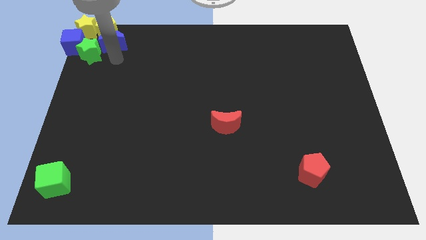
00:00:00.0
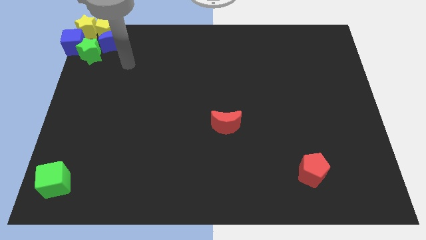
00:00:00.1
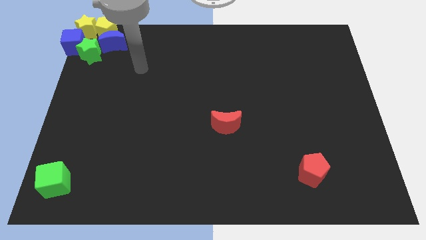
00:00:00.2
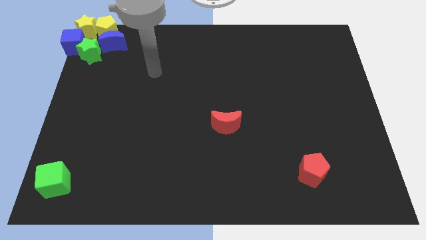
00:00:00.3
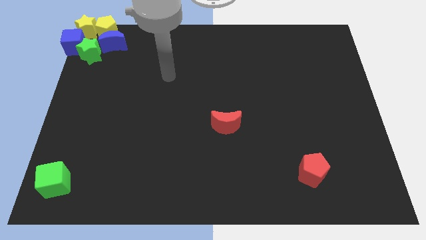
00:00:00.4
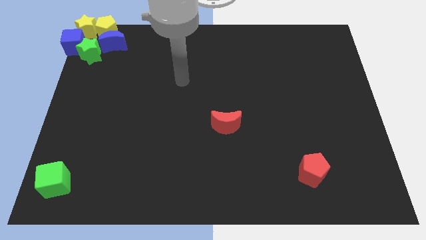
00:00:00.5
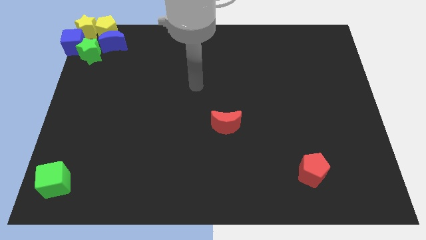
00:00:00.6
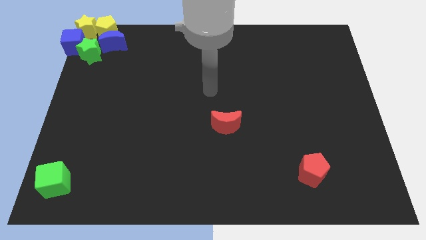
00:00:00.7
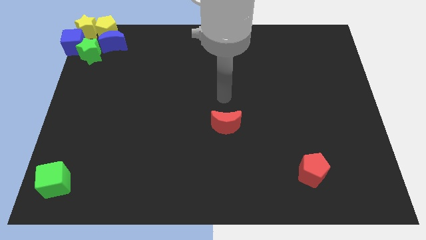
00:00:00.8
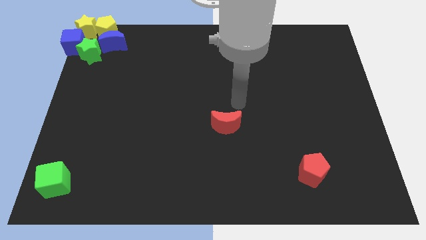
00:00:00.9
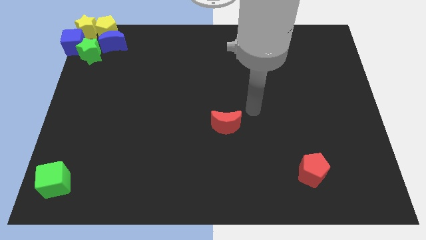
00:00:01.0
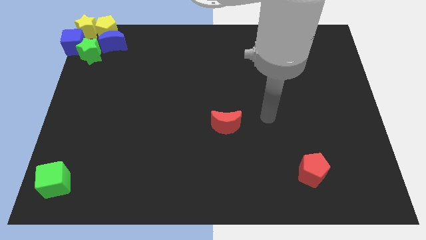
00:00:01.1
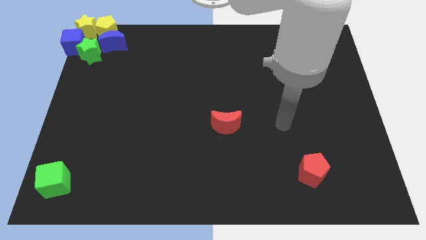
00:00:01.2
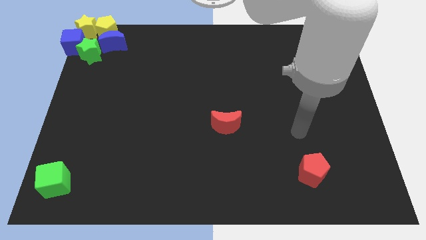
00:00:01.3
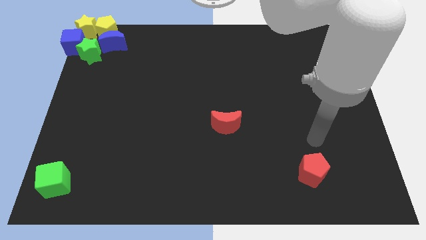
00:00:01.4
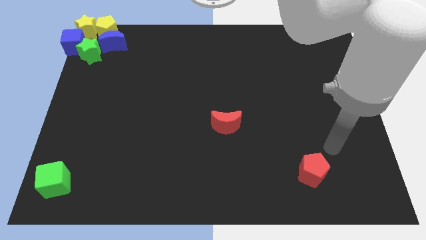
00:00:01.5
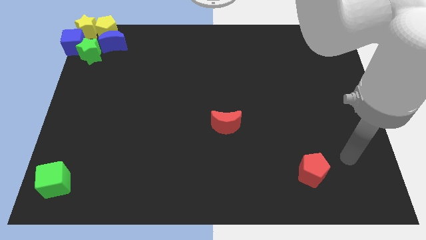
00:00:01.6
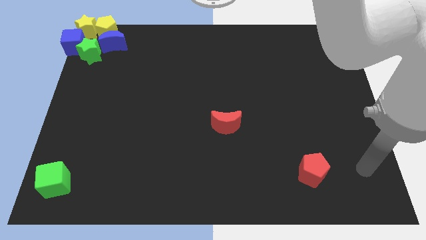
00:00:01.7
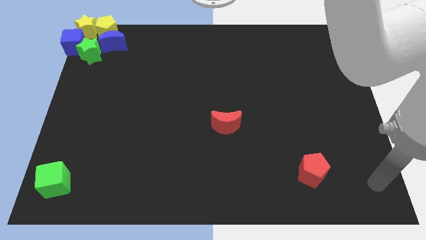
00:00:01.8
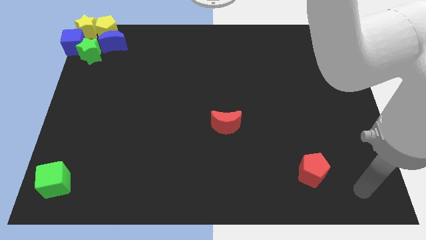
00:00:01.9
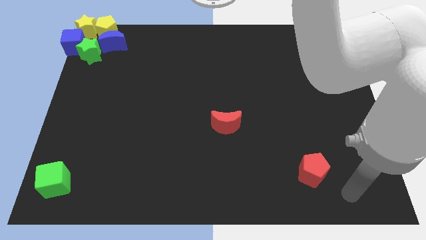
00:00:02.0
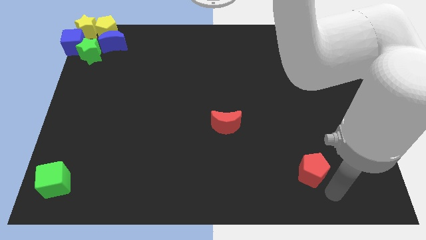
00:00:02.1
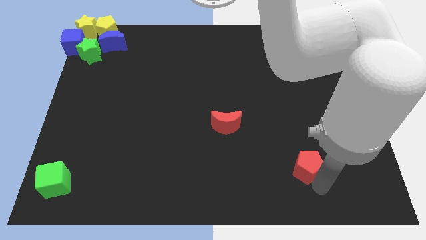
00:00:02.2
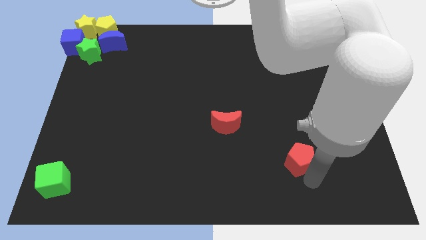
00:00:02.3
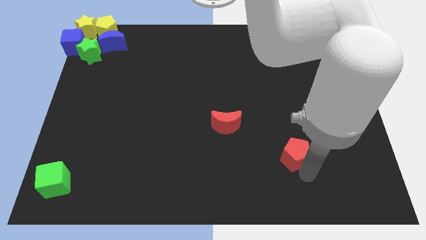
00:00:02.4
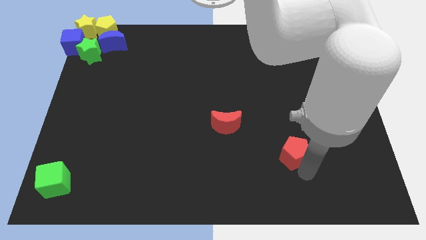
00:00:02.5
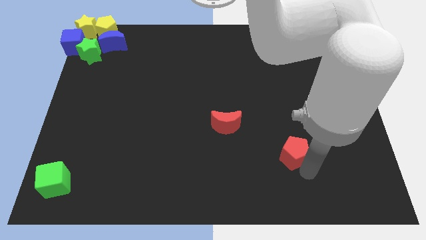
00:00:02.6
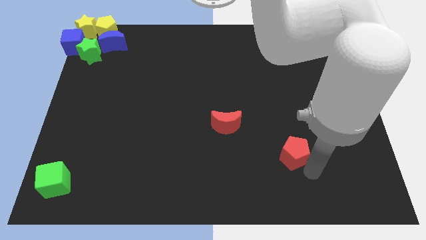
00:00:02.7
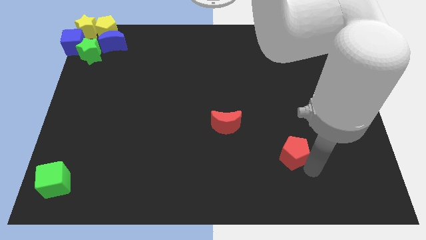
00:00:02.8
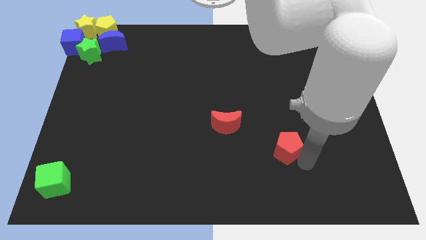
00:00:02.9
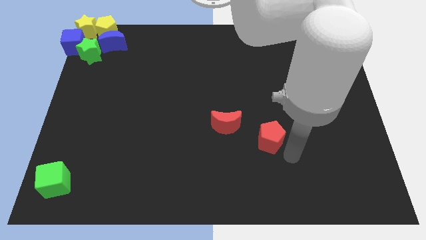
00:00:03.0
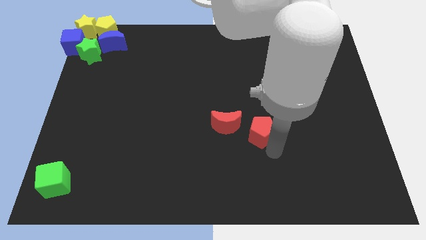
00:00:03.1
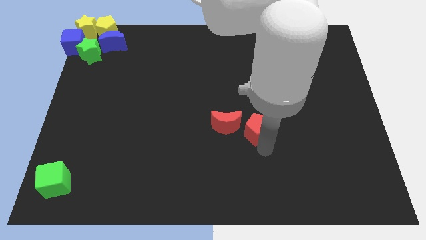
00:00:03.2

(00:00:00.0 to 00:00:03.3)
slide the red pentagon to the bottom right side of the red moon

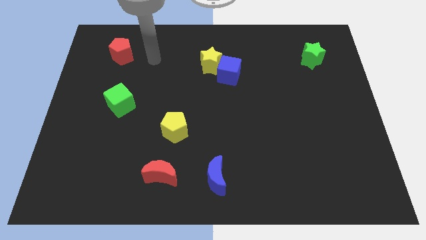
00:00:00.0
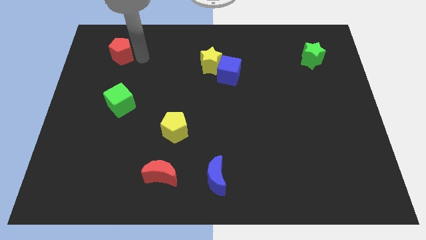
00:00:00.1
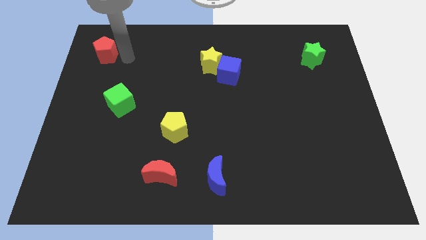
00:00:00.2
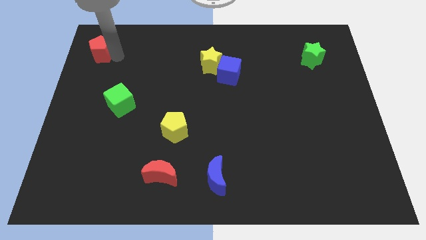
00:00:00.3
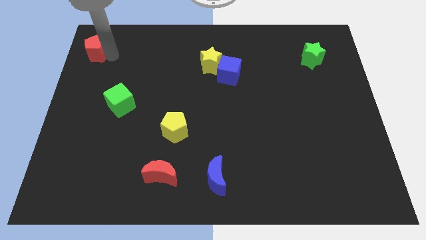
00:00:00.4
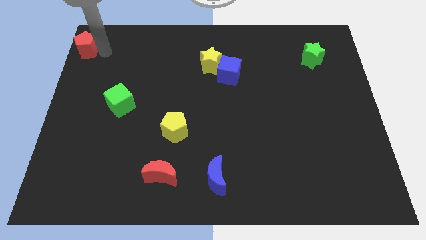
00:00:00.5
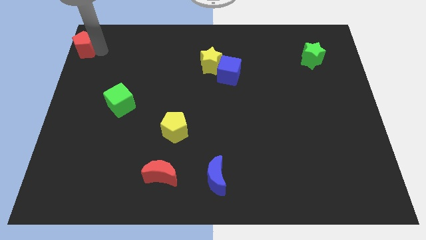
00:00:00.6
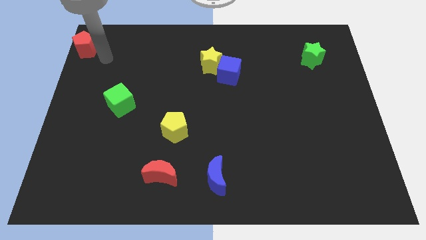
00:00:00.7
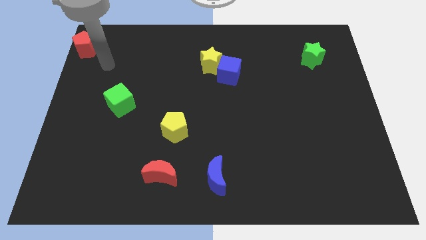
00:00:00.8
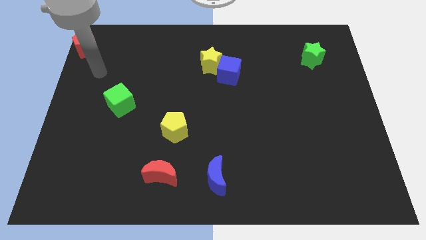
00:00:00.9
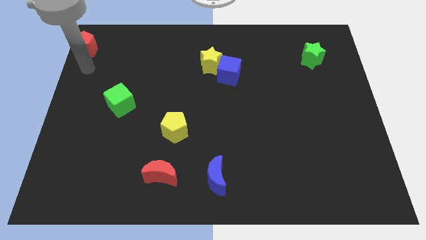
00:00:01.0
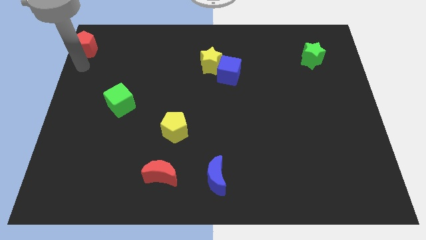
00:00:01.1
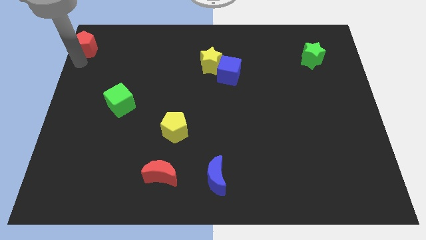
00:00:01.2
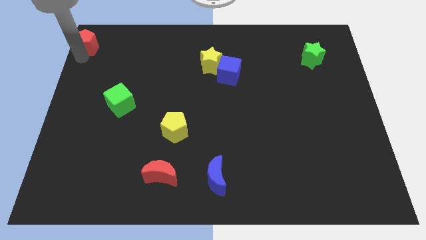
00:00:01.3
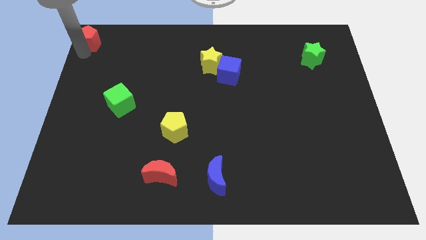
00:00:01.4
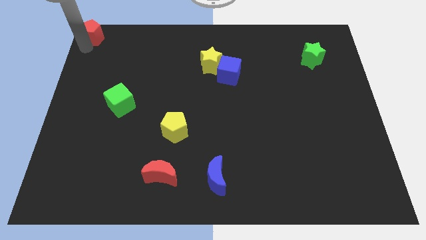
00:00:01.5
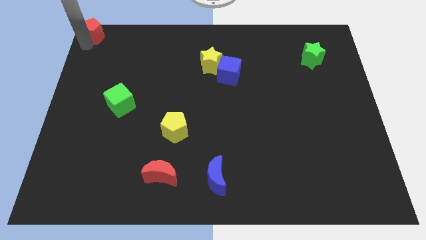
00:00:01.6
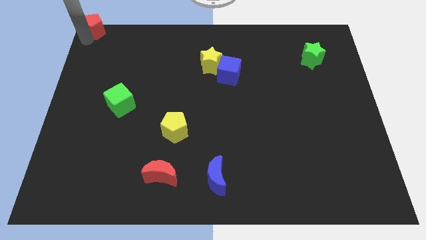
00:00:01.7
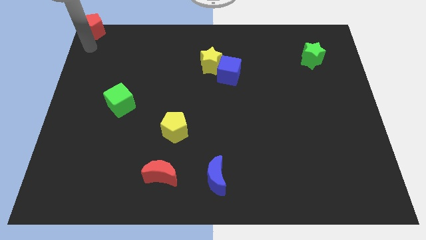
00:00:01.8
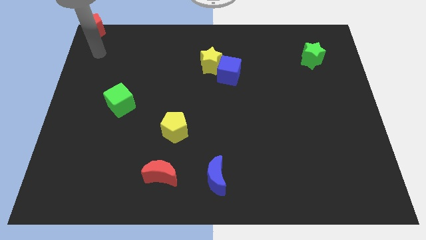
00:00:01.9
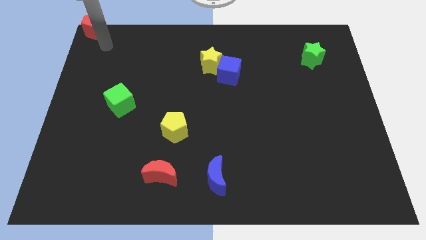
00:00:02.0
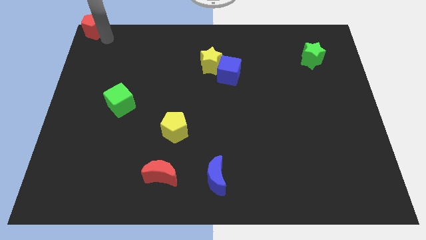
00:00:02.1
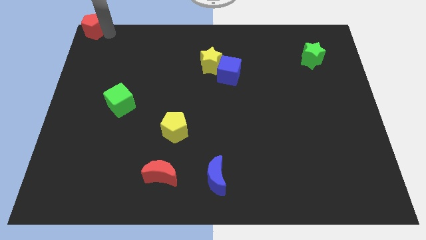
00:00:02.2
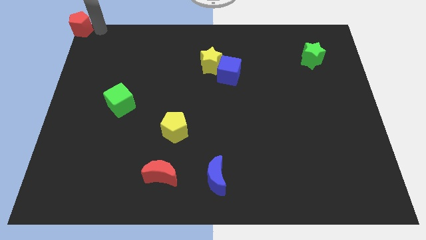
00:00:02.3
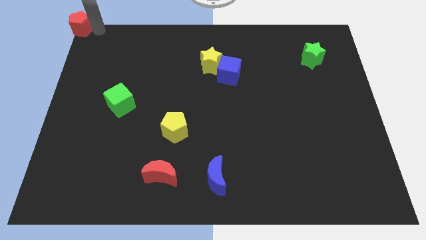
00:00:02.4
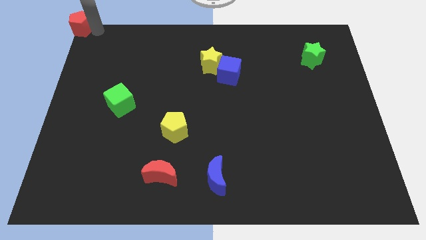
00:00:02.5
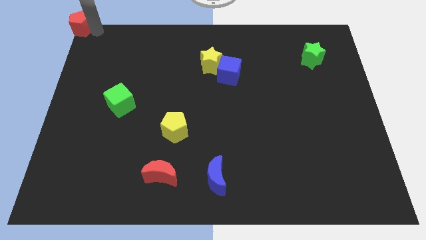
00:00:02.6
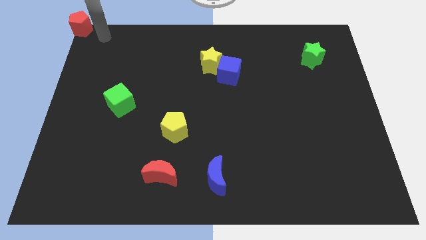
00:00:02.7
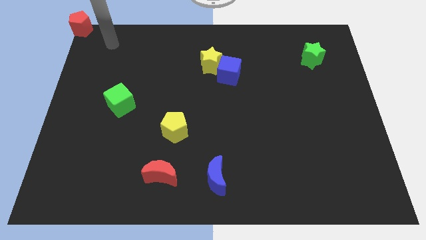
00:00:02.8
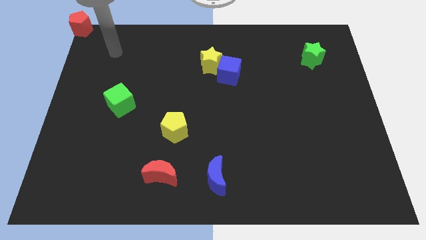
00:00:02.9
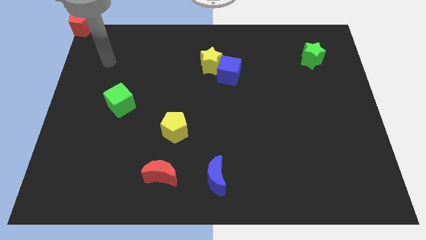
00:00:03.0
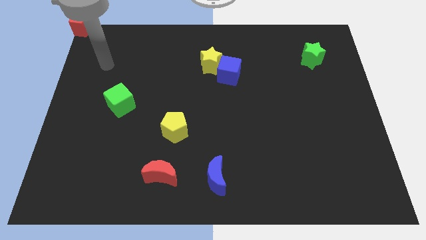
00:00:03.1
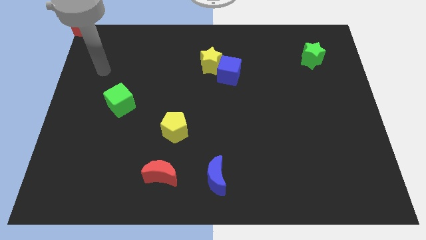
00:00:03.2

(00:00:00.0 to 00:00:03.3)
push the red pentagon to the top left corner of the board

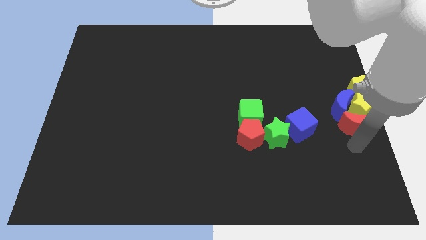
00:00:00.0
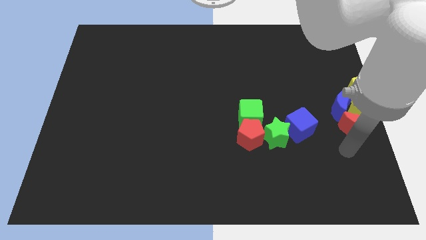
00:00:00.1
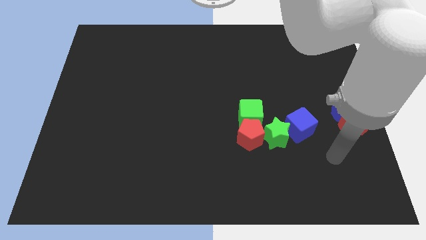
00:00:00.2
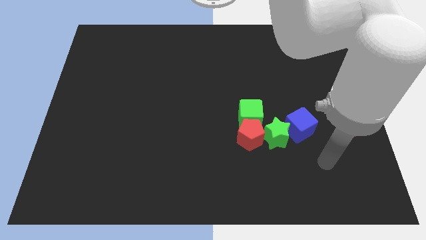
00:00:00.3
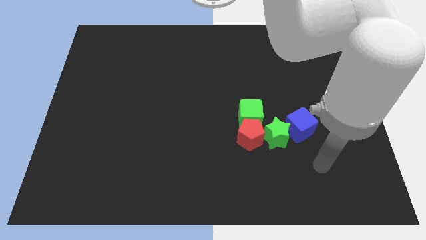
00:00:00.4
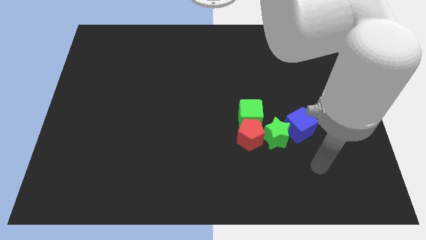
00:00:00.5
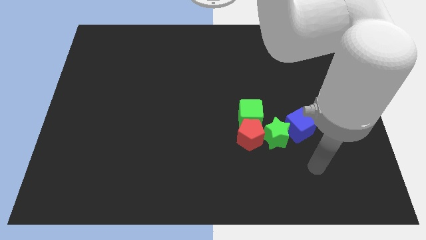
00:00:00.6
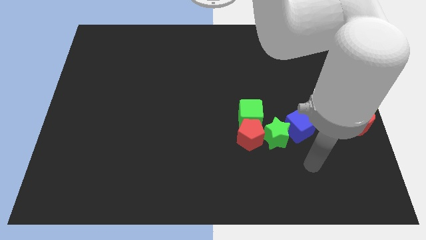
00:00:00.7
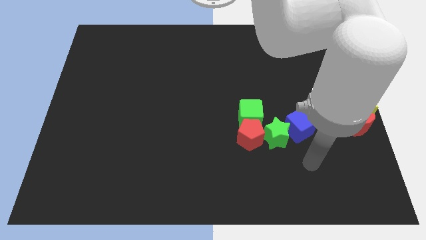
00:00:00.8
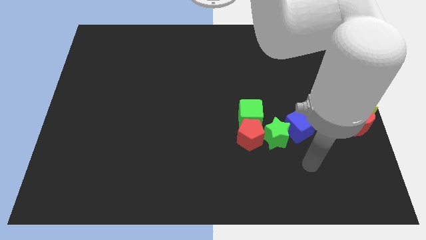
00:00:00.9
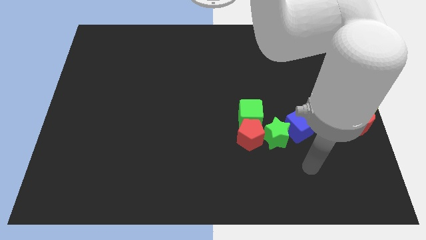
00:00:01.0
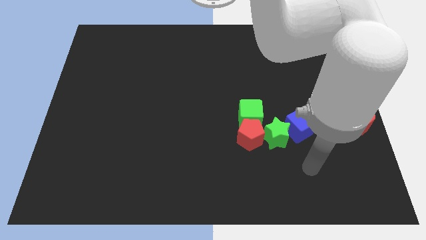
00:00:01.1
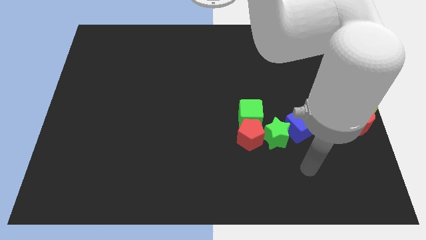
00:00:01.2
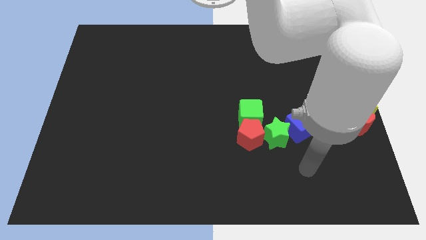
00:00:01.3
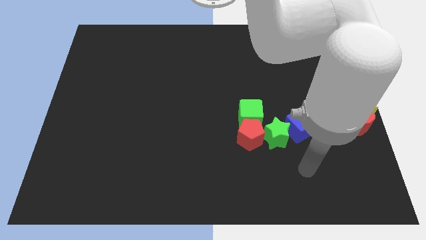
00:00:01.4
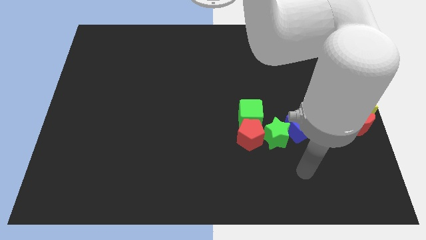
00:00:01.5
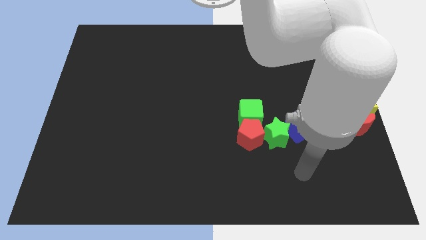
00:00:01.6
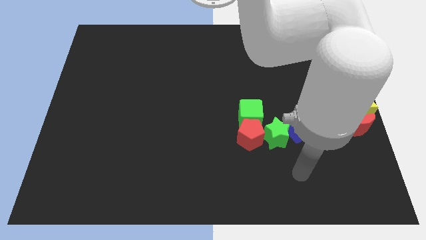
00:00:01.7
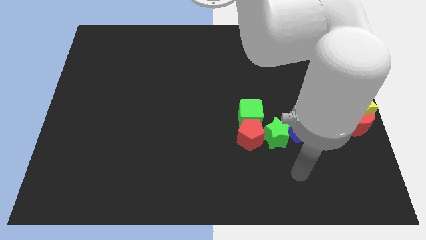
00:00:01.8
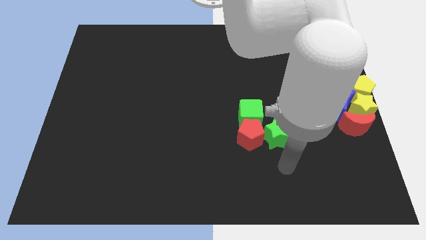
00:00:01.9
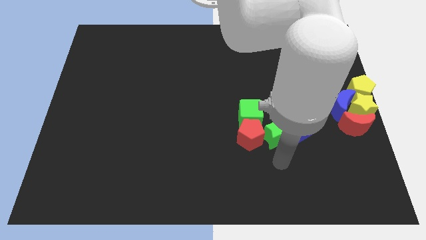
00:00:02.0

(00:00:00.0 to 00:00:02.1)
place the arm down to the green star

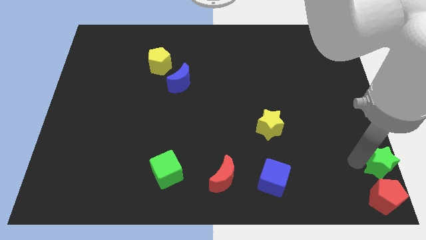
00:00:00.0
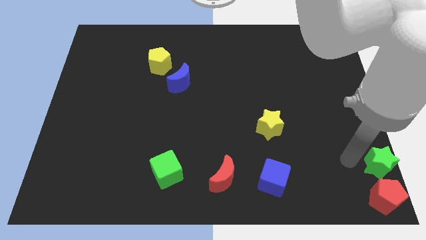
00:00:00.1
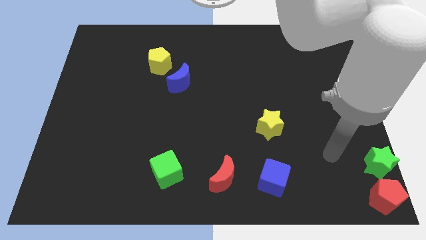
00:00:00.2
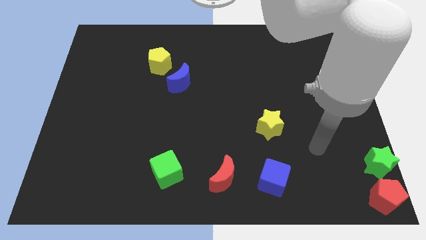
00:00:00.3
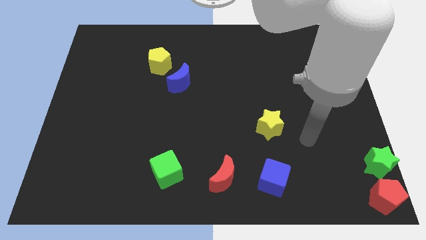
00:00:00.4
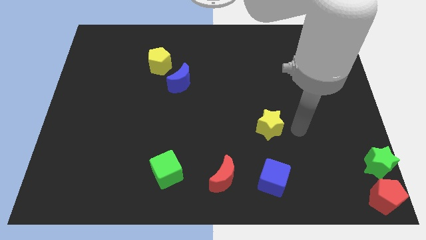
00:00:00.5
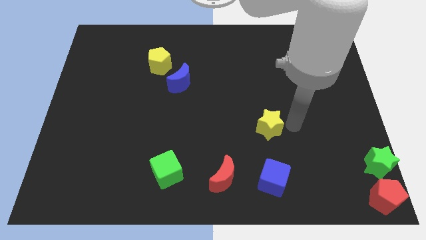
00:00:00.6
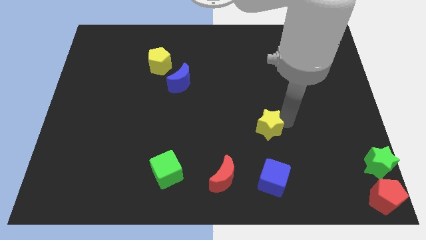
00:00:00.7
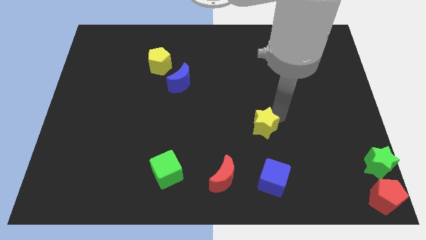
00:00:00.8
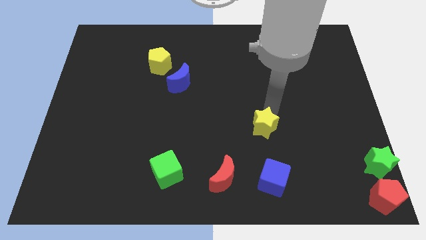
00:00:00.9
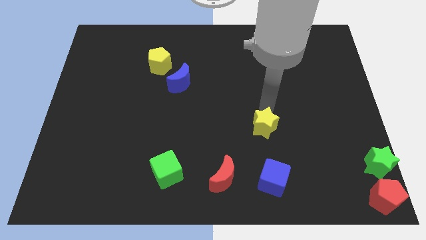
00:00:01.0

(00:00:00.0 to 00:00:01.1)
move the arm away from the green star
